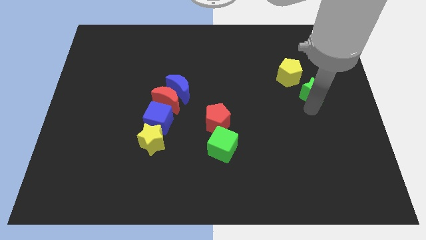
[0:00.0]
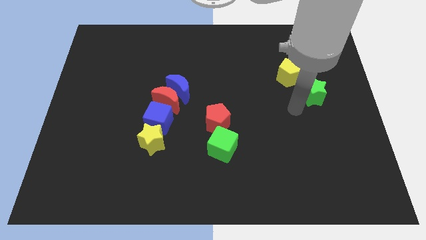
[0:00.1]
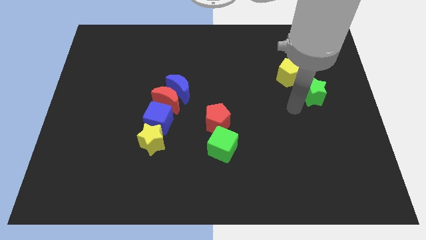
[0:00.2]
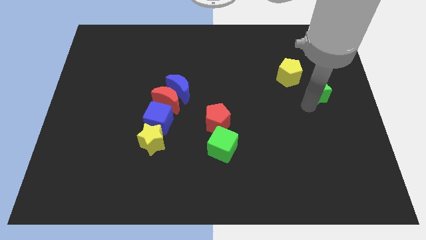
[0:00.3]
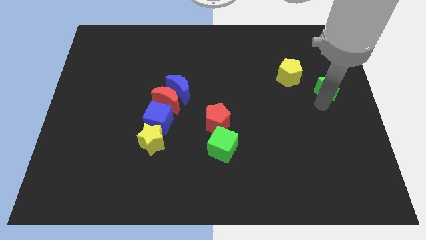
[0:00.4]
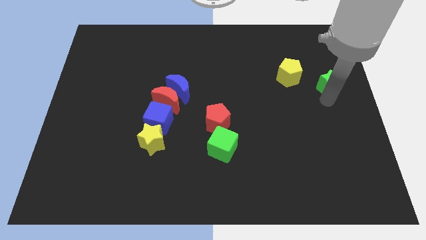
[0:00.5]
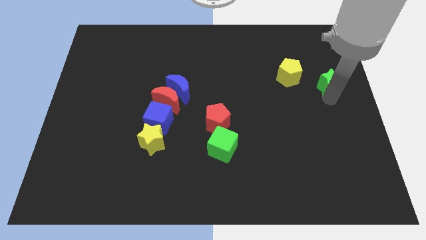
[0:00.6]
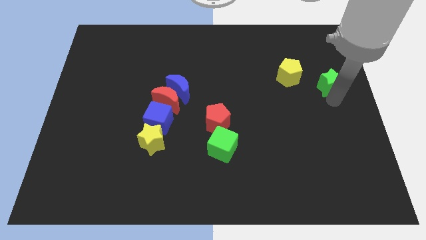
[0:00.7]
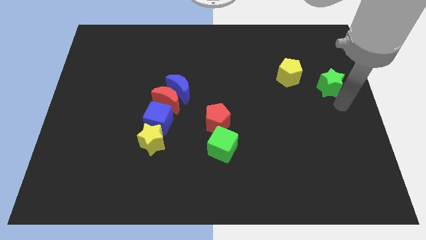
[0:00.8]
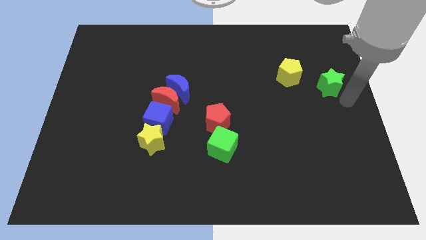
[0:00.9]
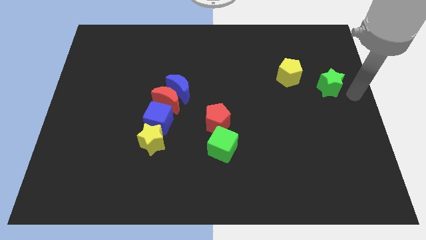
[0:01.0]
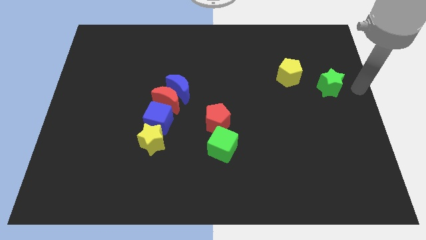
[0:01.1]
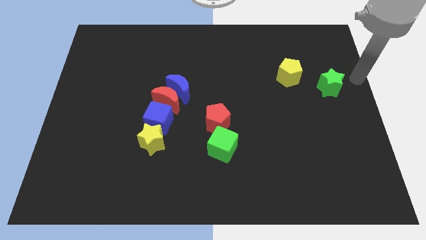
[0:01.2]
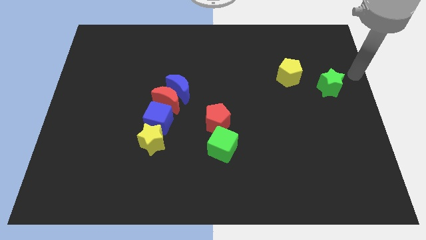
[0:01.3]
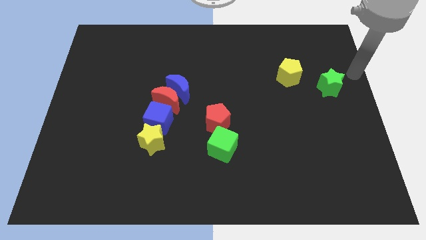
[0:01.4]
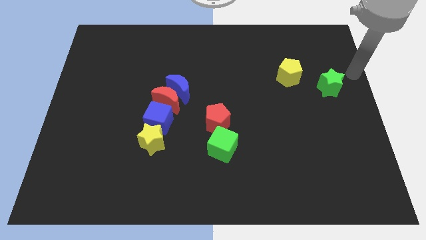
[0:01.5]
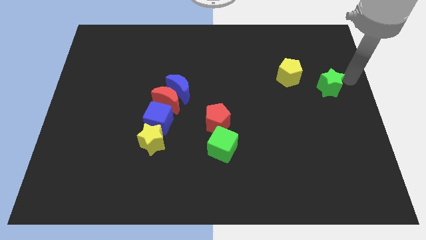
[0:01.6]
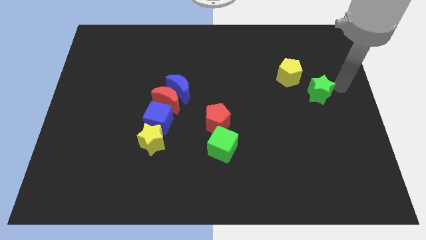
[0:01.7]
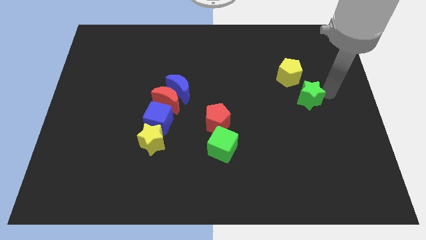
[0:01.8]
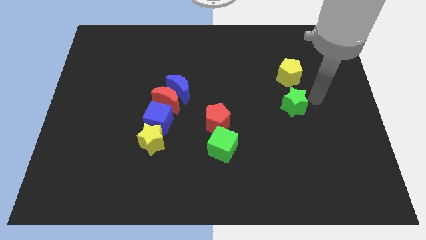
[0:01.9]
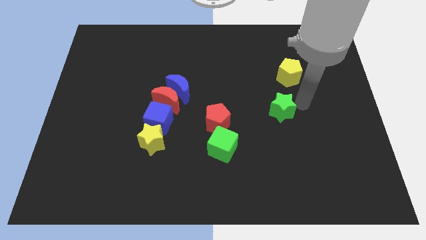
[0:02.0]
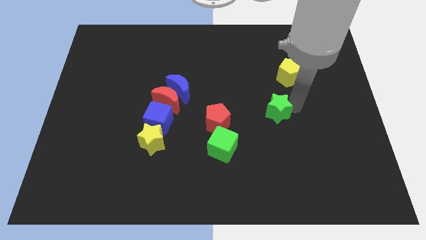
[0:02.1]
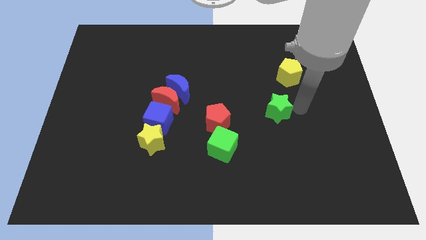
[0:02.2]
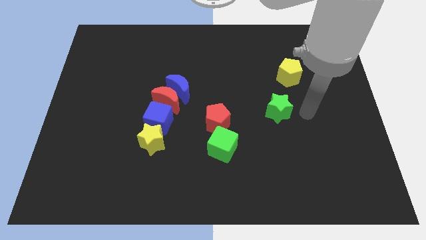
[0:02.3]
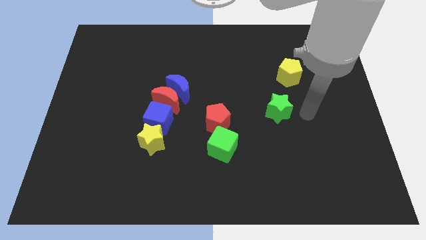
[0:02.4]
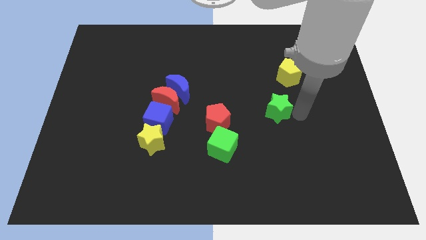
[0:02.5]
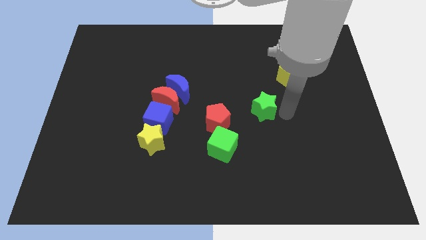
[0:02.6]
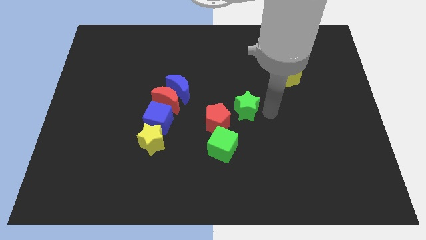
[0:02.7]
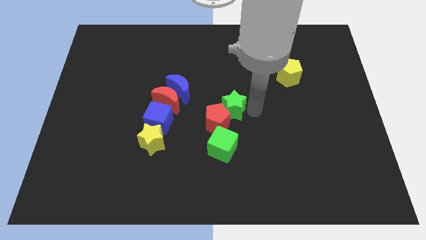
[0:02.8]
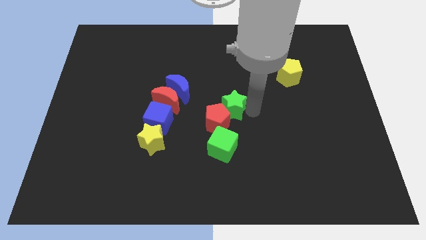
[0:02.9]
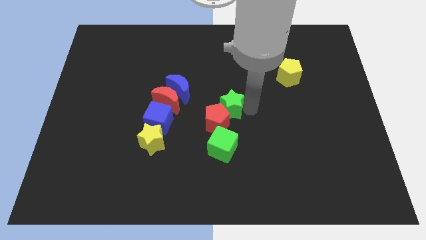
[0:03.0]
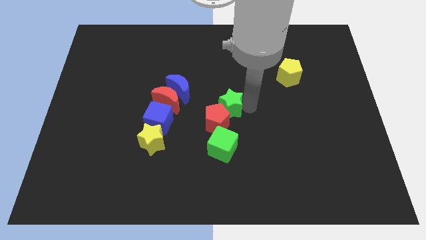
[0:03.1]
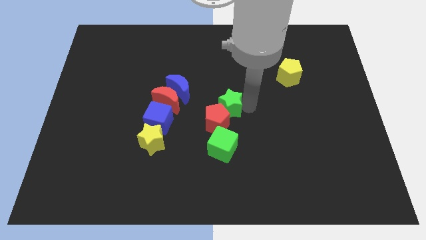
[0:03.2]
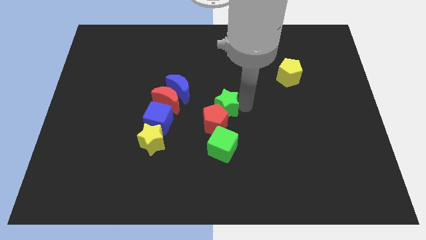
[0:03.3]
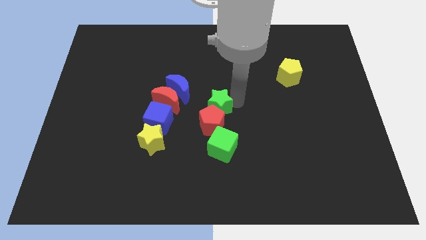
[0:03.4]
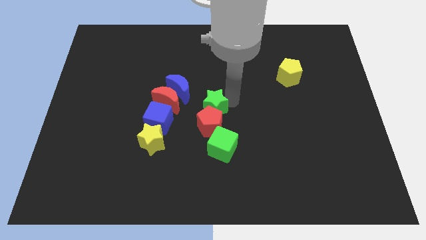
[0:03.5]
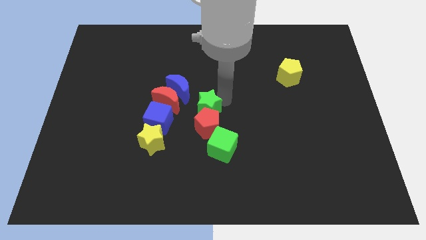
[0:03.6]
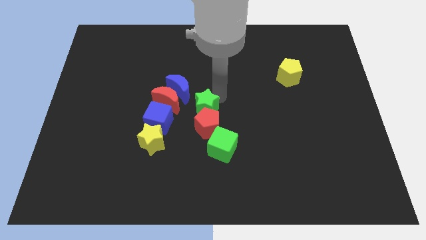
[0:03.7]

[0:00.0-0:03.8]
move the green star to the center of the board

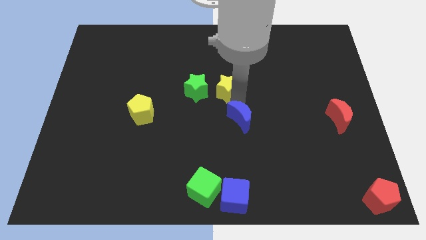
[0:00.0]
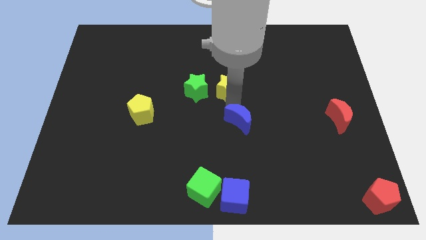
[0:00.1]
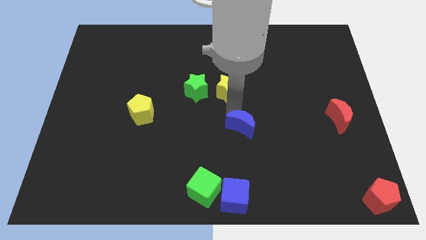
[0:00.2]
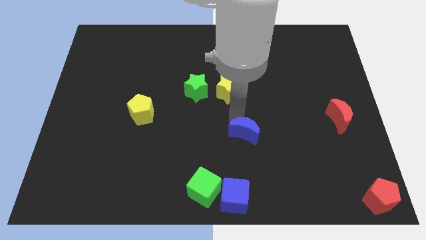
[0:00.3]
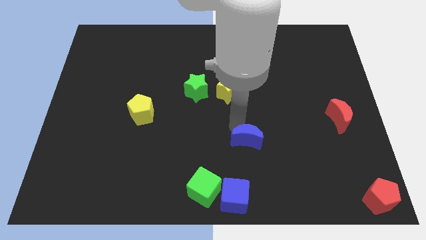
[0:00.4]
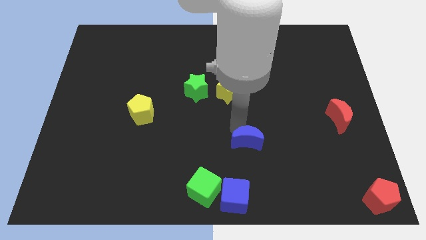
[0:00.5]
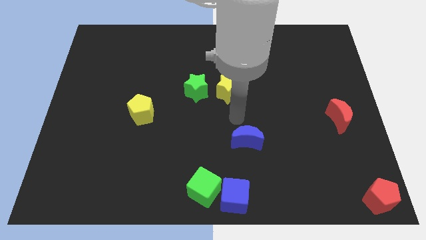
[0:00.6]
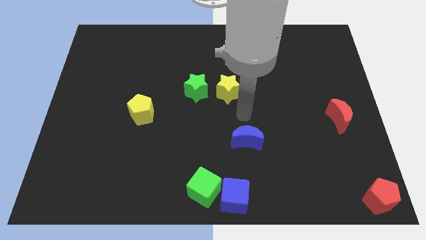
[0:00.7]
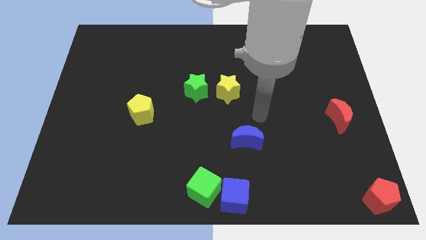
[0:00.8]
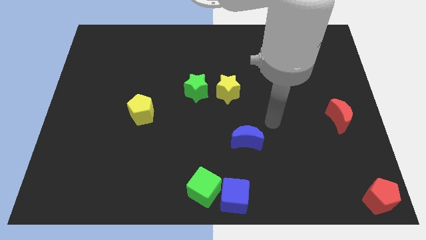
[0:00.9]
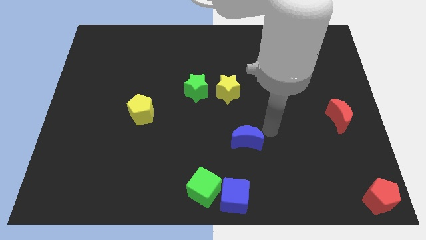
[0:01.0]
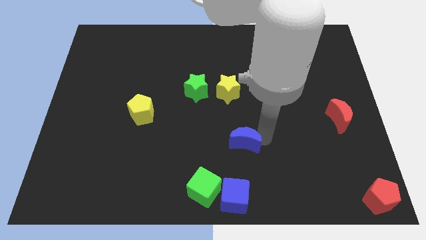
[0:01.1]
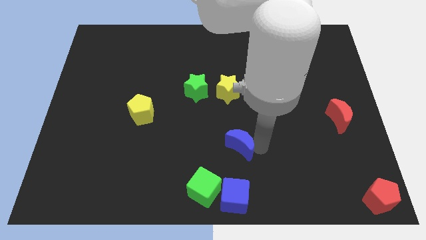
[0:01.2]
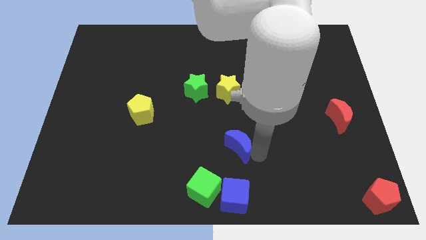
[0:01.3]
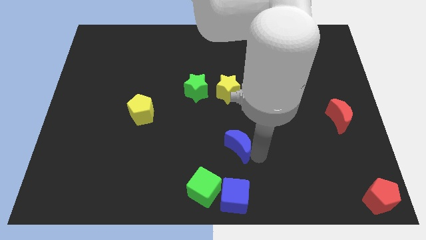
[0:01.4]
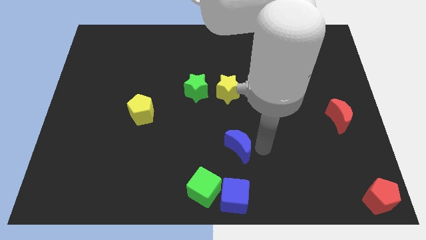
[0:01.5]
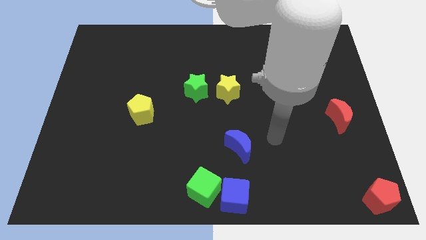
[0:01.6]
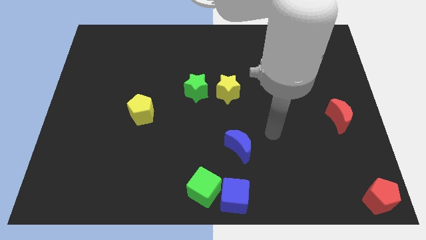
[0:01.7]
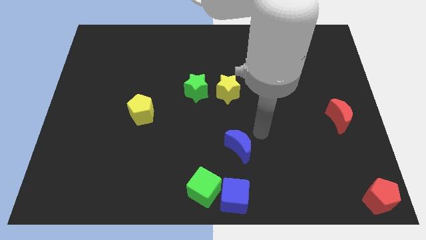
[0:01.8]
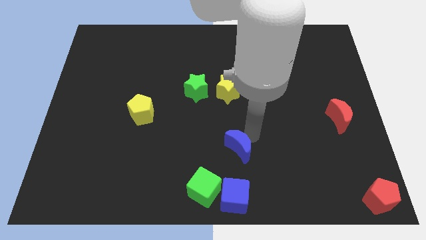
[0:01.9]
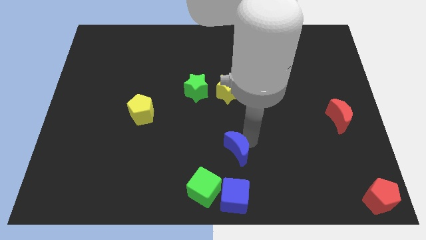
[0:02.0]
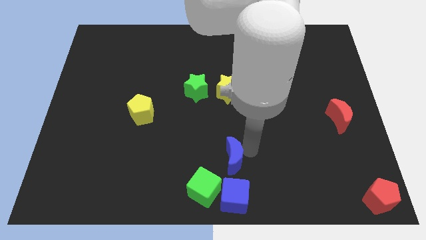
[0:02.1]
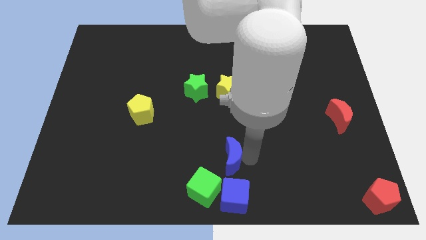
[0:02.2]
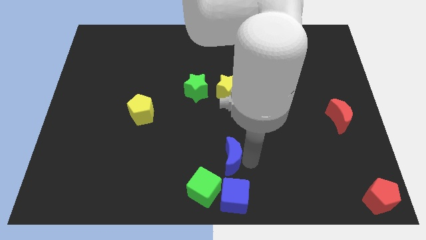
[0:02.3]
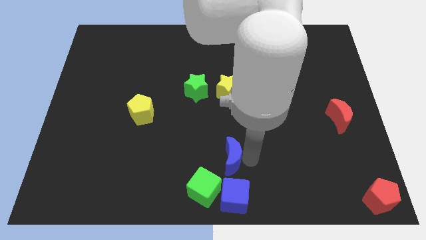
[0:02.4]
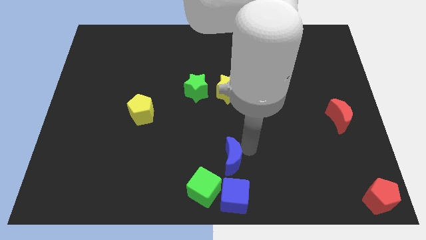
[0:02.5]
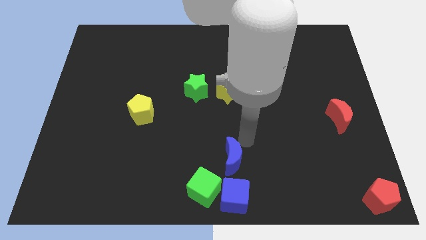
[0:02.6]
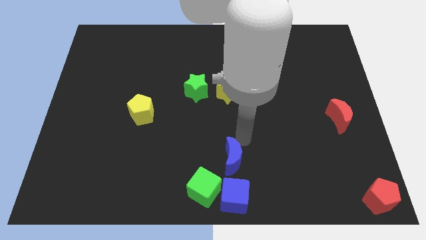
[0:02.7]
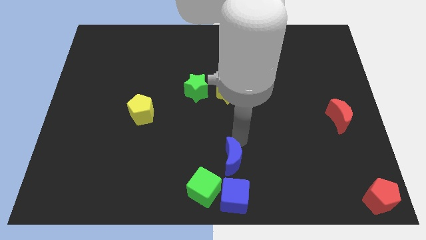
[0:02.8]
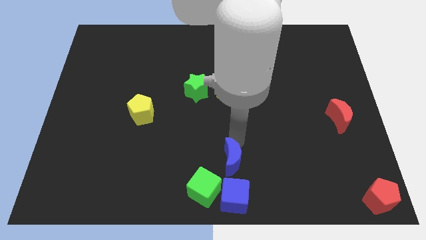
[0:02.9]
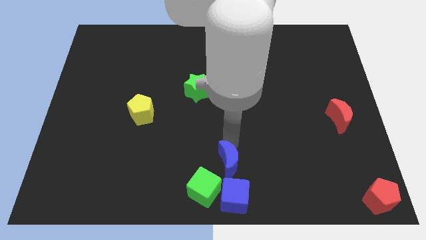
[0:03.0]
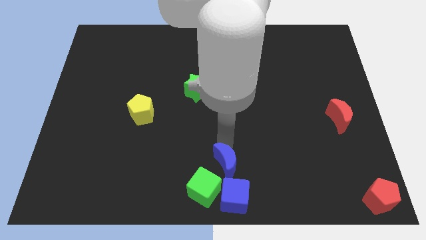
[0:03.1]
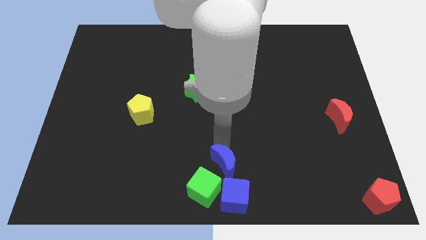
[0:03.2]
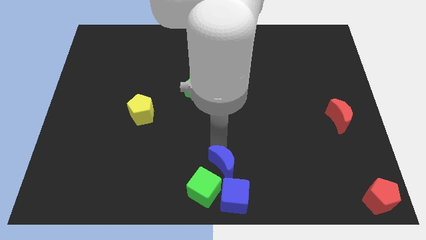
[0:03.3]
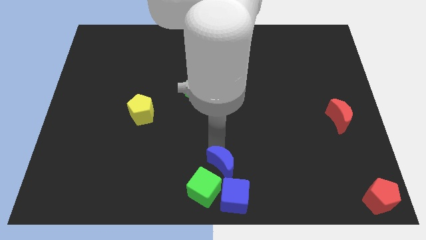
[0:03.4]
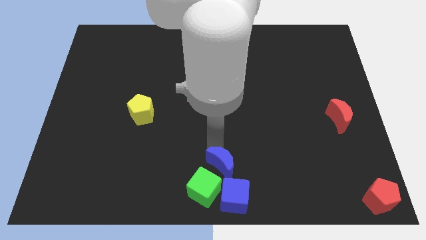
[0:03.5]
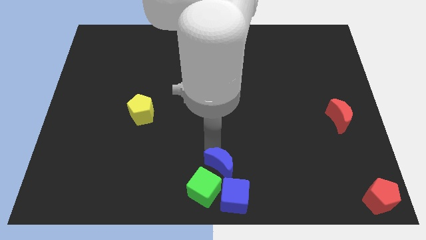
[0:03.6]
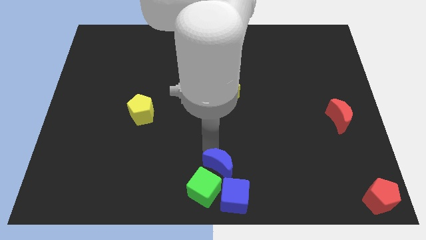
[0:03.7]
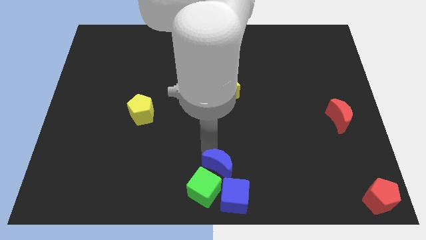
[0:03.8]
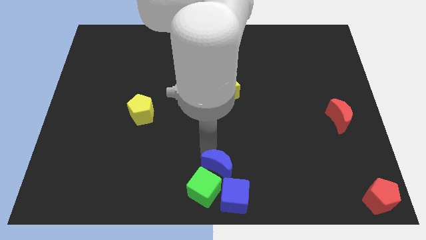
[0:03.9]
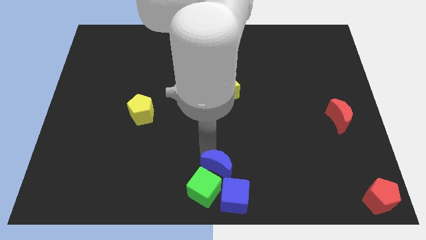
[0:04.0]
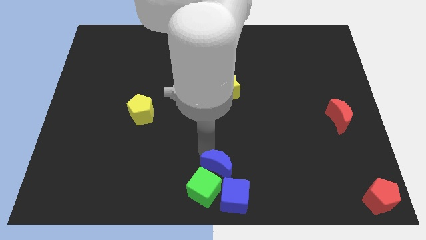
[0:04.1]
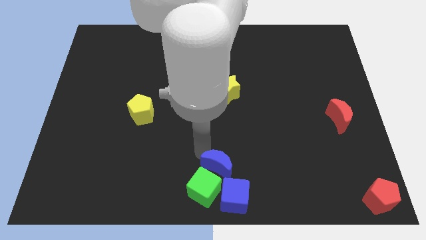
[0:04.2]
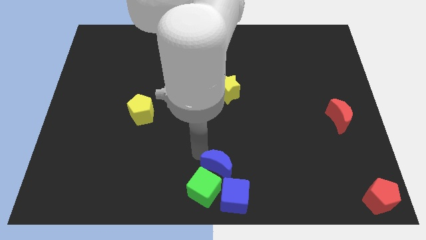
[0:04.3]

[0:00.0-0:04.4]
slide the blue crescent into the group of blocks

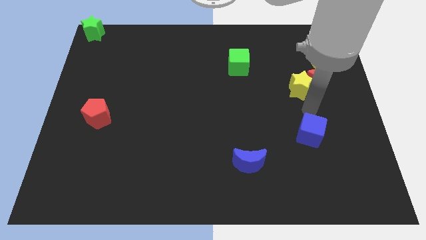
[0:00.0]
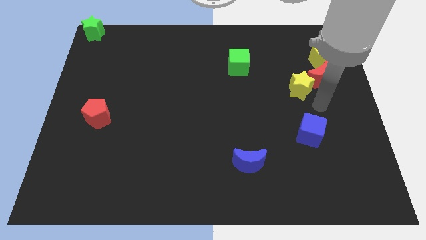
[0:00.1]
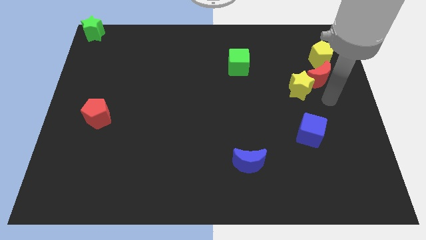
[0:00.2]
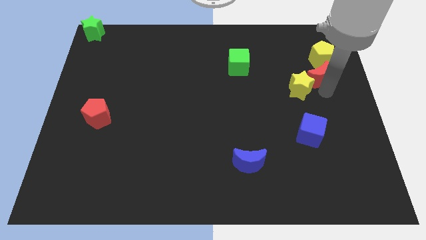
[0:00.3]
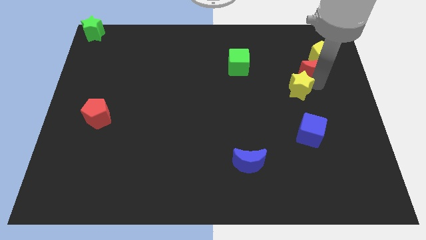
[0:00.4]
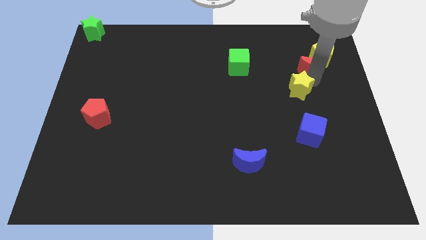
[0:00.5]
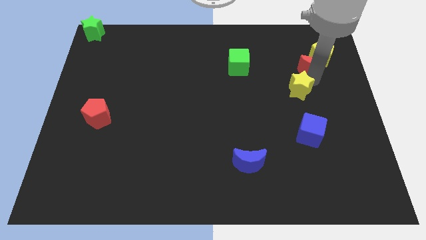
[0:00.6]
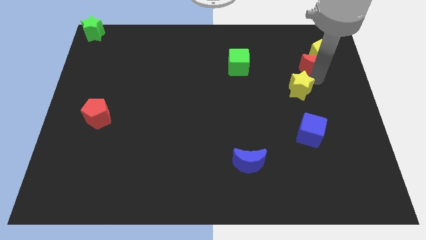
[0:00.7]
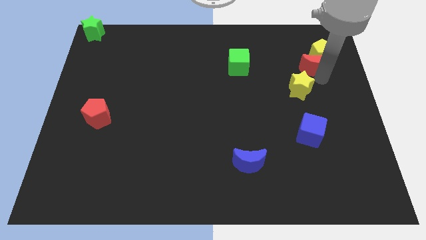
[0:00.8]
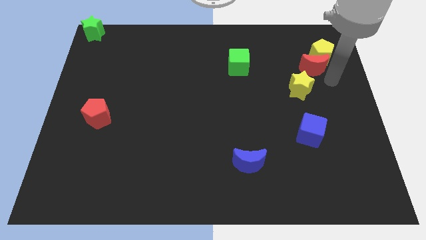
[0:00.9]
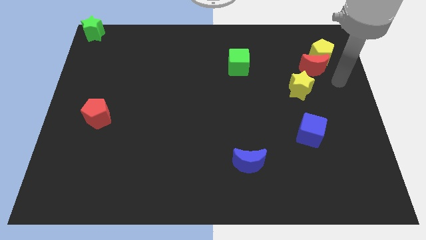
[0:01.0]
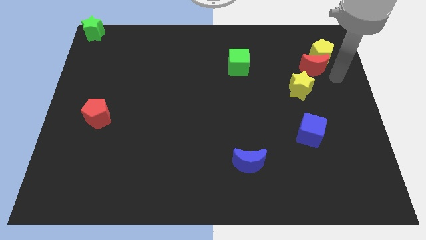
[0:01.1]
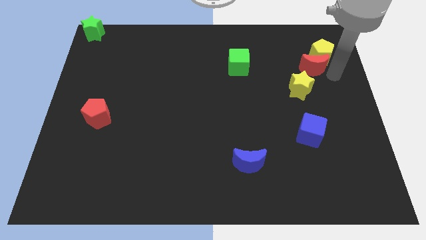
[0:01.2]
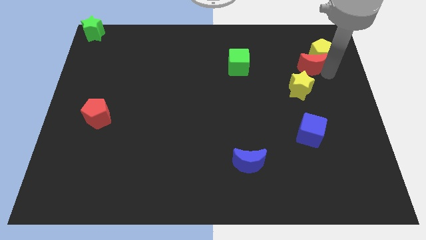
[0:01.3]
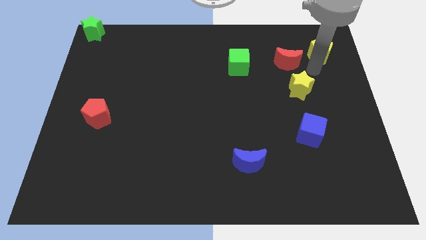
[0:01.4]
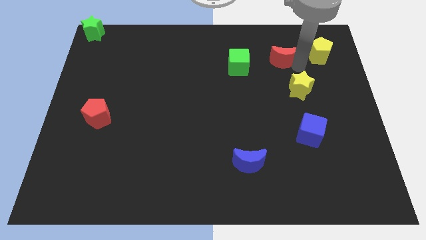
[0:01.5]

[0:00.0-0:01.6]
separate the red crescent from yellow pentagon
